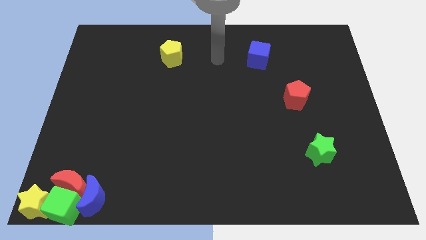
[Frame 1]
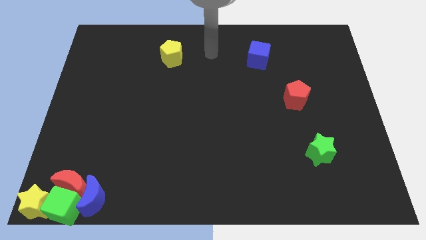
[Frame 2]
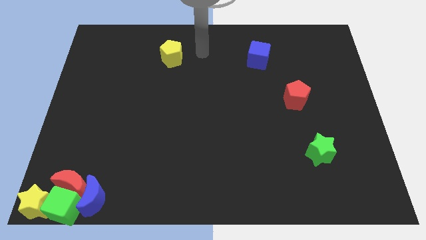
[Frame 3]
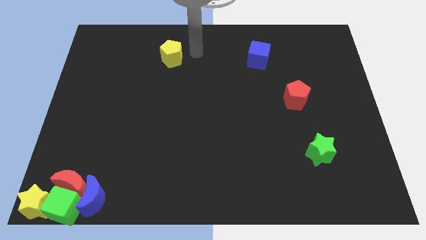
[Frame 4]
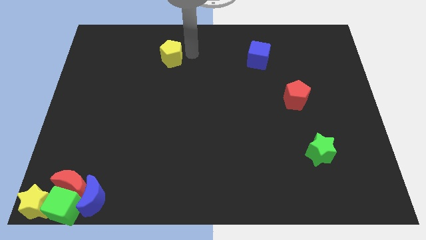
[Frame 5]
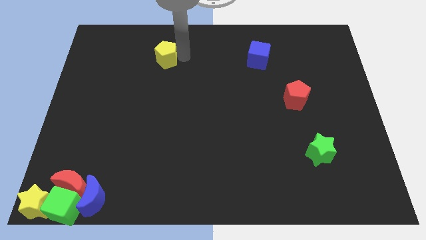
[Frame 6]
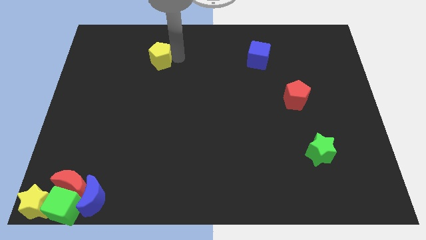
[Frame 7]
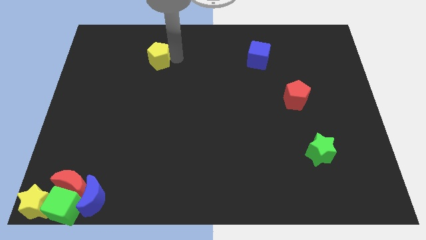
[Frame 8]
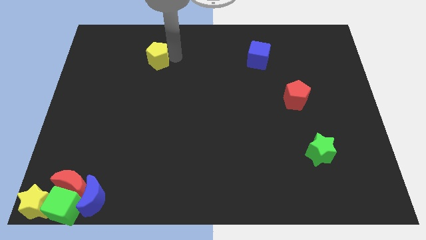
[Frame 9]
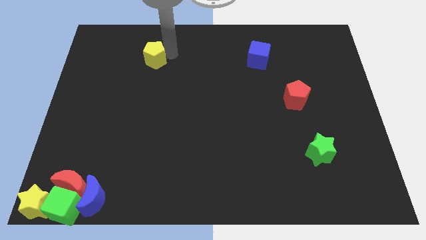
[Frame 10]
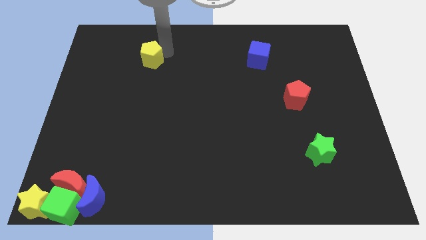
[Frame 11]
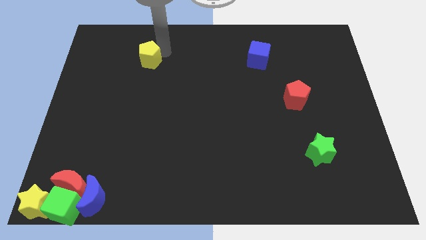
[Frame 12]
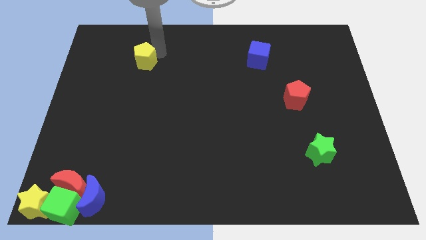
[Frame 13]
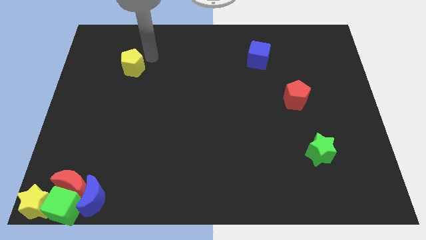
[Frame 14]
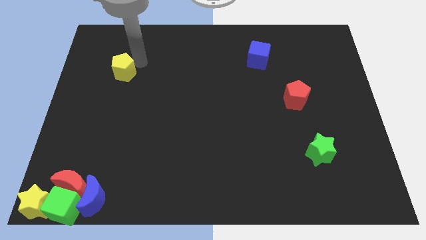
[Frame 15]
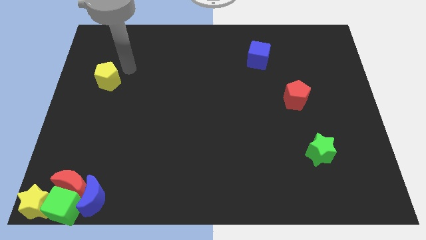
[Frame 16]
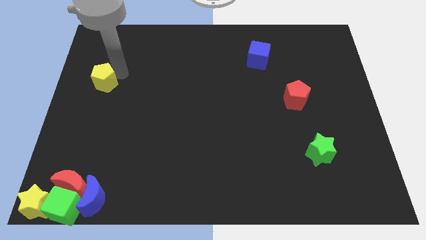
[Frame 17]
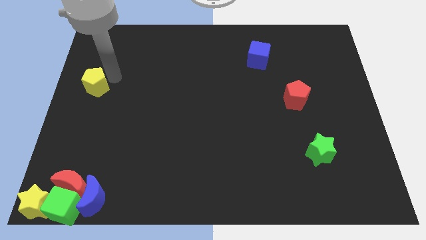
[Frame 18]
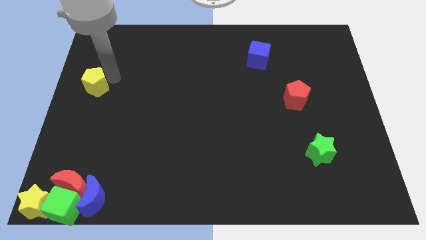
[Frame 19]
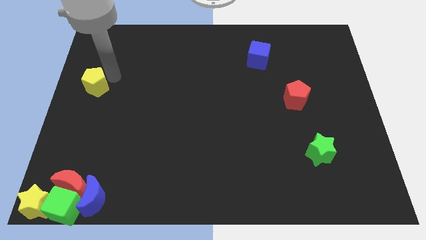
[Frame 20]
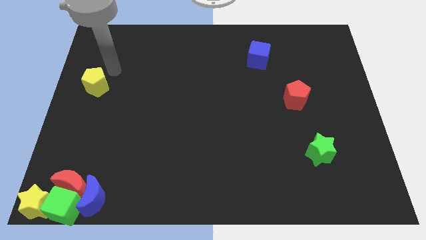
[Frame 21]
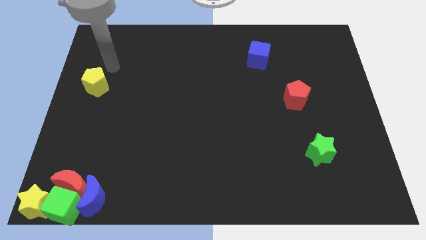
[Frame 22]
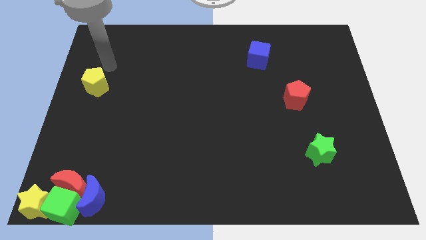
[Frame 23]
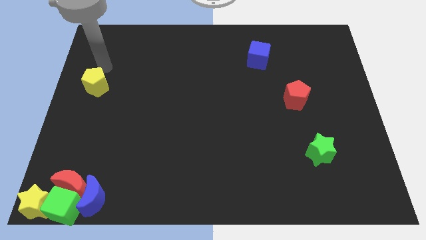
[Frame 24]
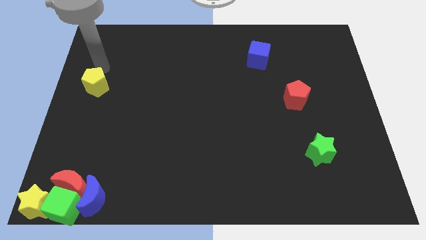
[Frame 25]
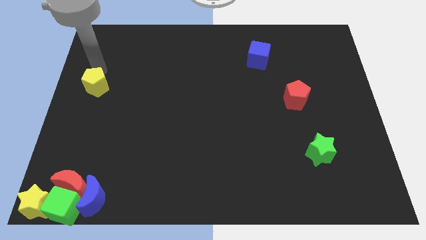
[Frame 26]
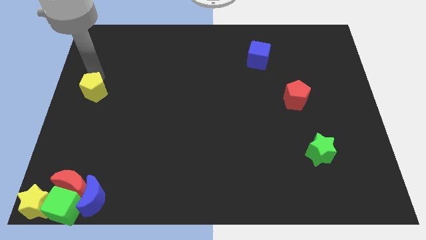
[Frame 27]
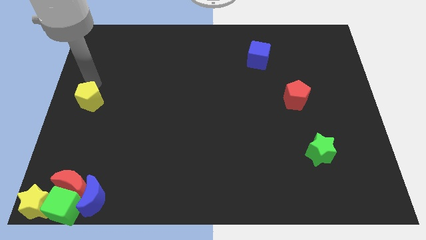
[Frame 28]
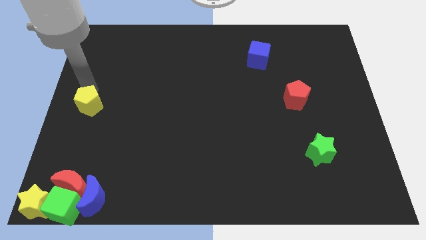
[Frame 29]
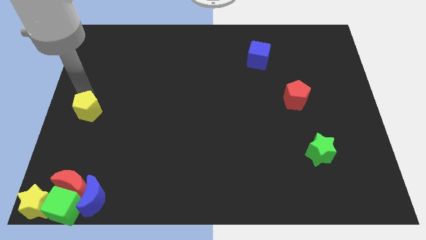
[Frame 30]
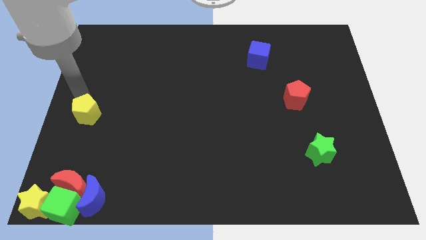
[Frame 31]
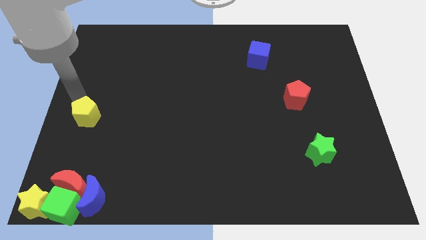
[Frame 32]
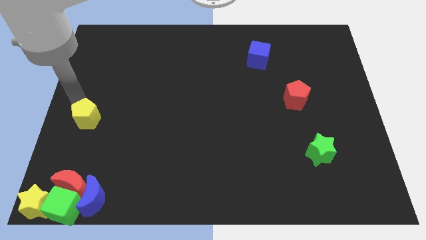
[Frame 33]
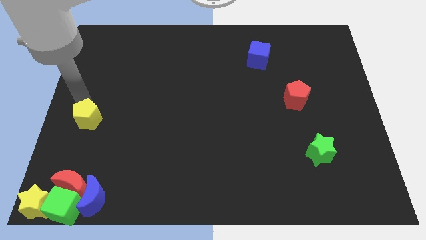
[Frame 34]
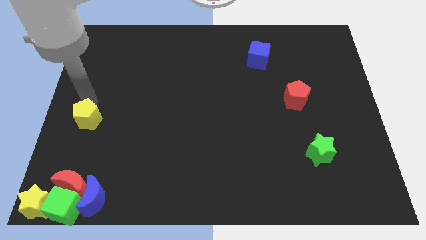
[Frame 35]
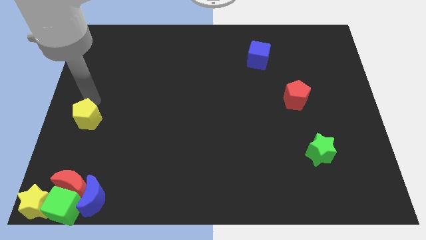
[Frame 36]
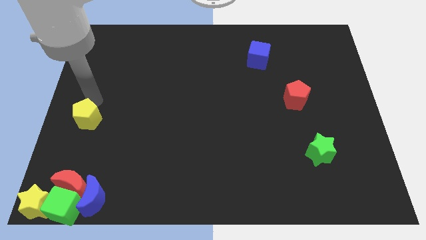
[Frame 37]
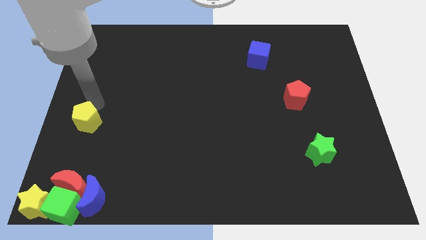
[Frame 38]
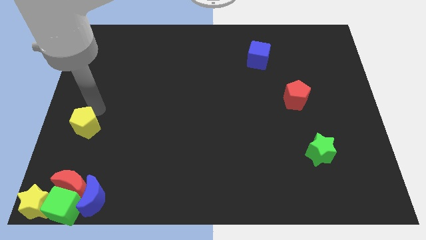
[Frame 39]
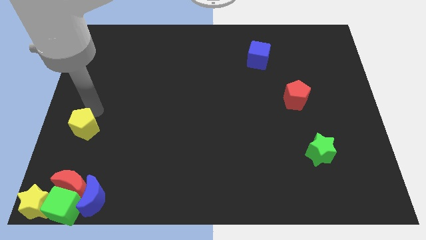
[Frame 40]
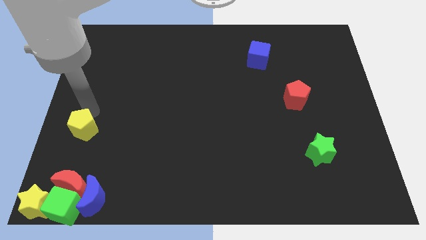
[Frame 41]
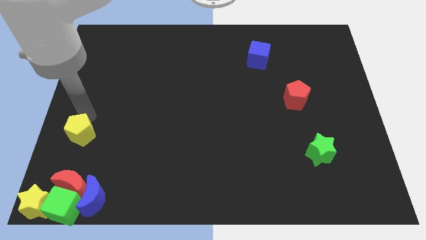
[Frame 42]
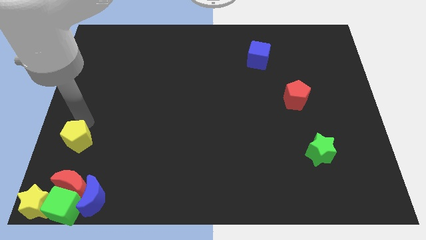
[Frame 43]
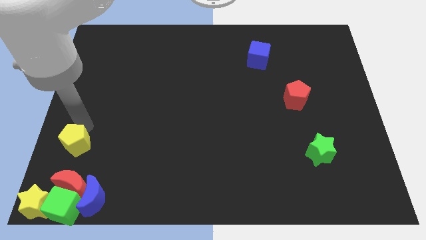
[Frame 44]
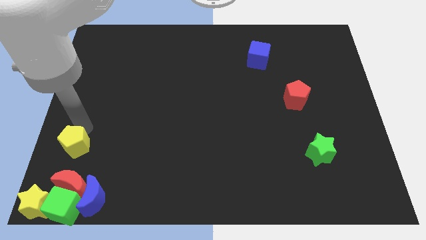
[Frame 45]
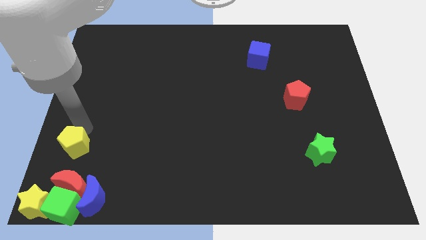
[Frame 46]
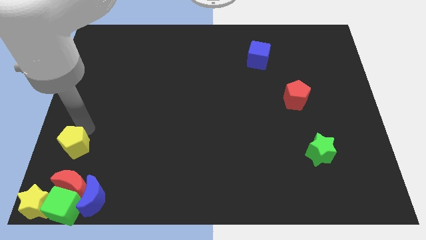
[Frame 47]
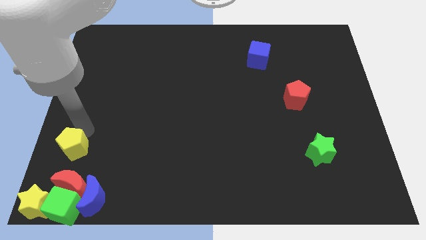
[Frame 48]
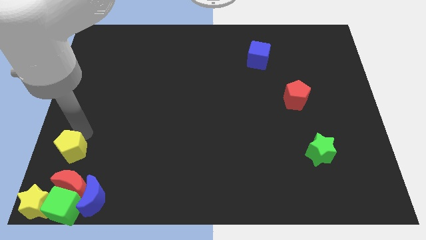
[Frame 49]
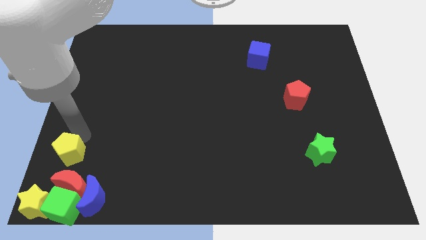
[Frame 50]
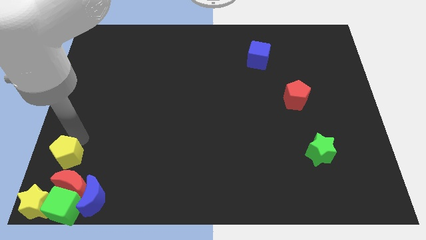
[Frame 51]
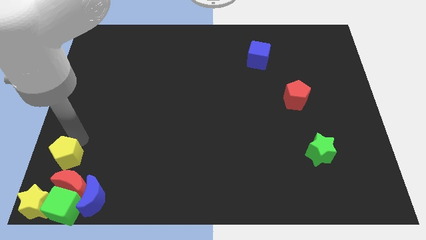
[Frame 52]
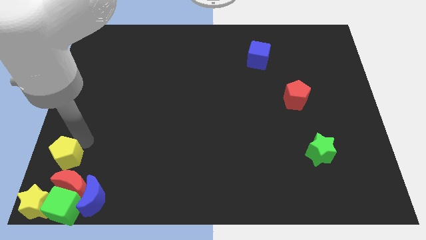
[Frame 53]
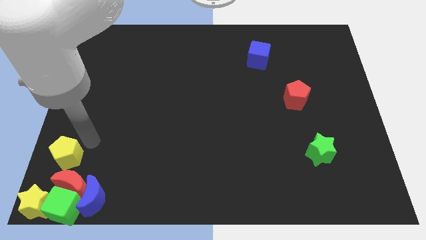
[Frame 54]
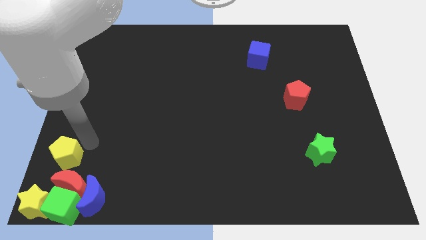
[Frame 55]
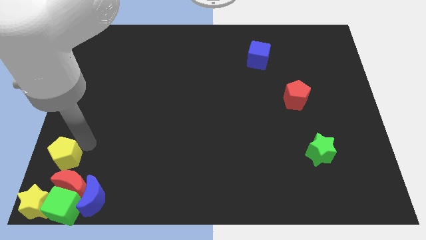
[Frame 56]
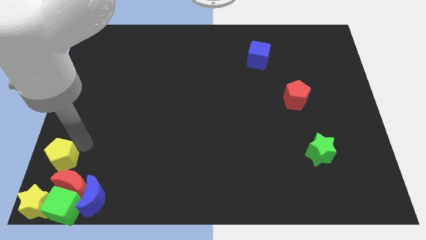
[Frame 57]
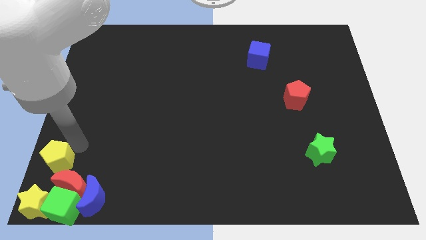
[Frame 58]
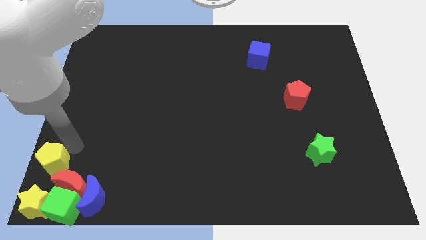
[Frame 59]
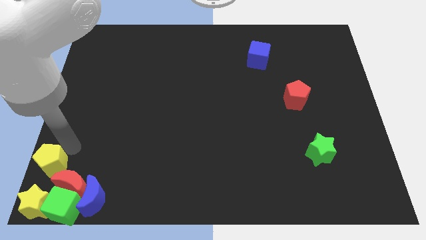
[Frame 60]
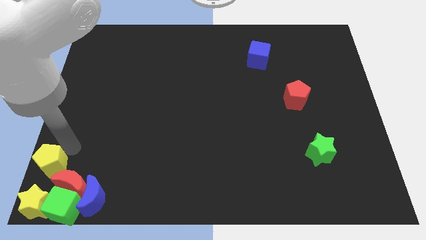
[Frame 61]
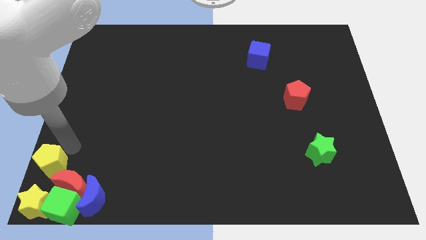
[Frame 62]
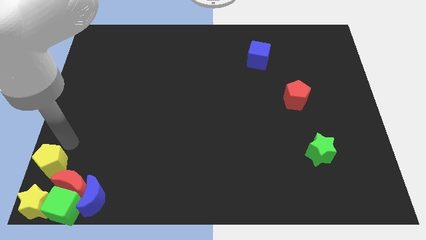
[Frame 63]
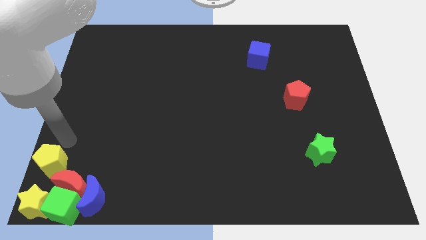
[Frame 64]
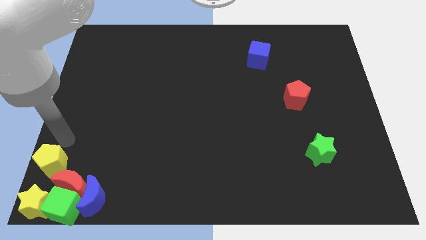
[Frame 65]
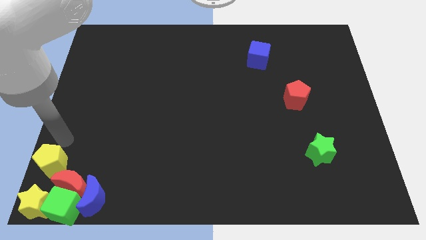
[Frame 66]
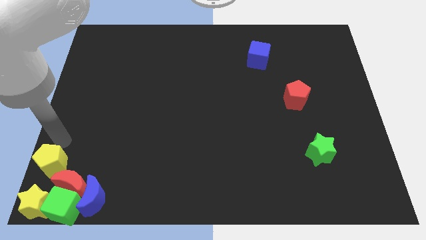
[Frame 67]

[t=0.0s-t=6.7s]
push the yellow pentagon towards the yellow star

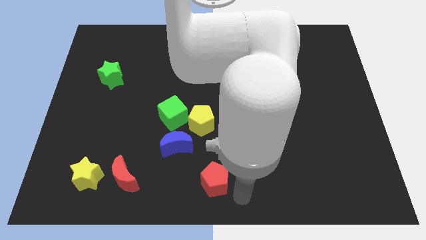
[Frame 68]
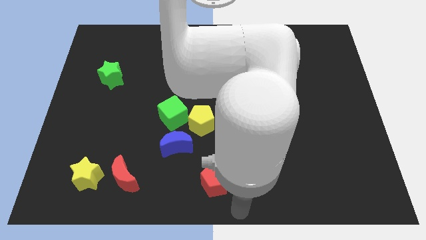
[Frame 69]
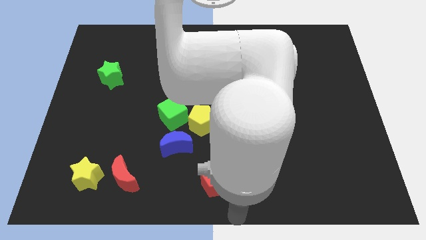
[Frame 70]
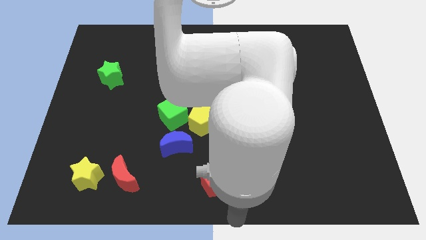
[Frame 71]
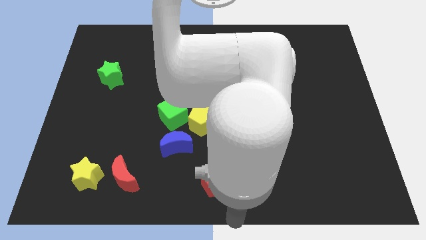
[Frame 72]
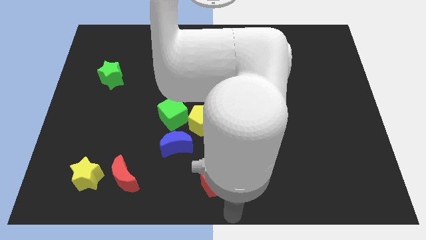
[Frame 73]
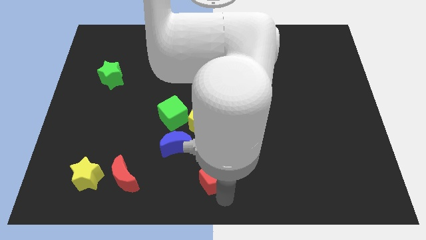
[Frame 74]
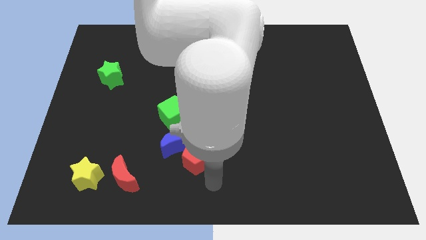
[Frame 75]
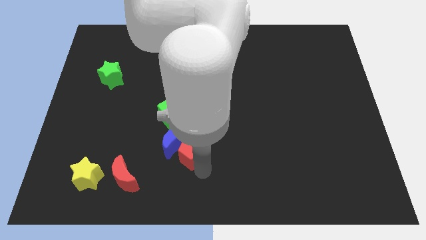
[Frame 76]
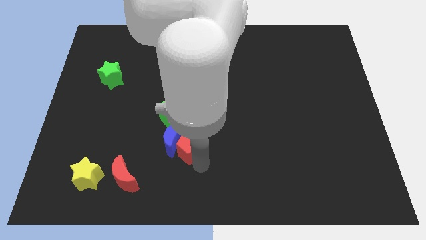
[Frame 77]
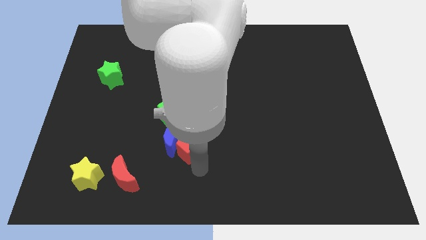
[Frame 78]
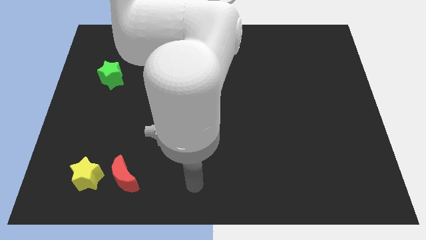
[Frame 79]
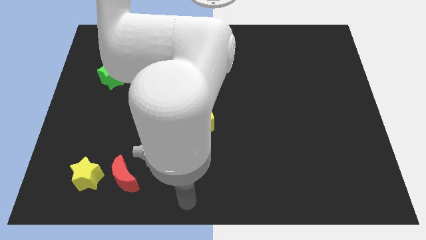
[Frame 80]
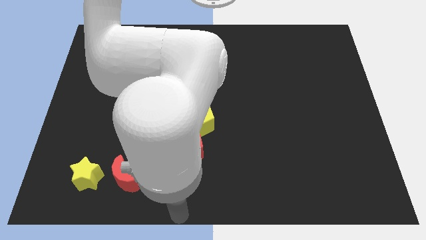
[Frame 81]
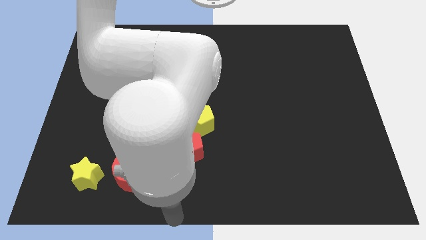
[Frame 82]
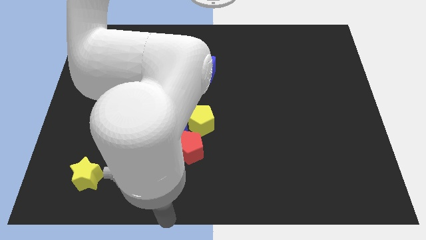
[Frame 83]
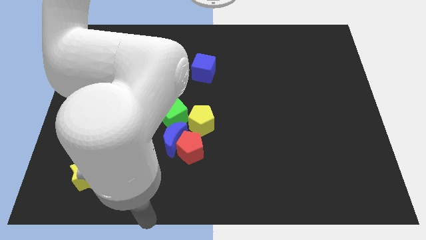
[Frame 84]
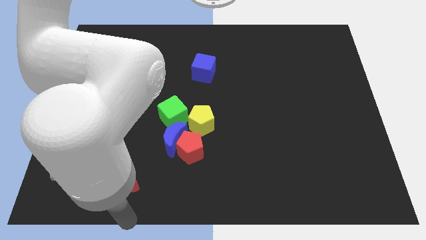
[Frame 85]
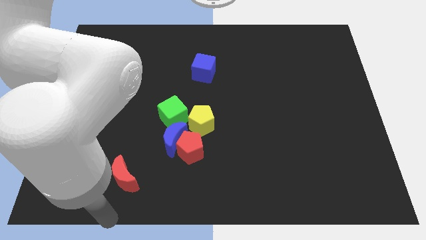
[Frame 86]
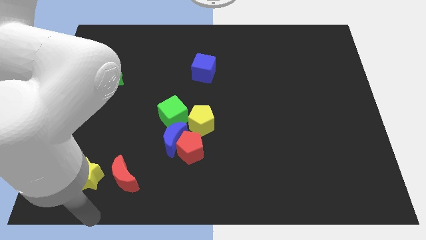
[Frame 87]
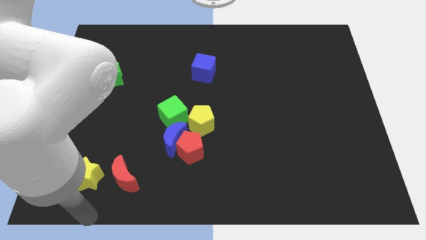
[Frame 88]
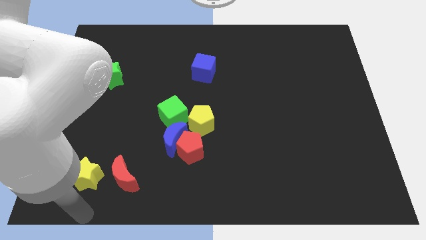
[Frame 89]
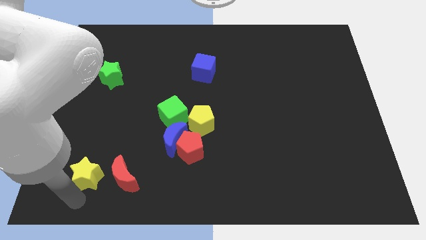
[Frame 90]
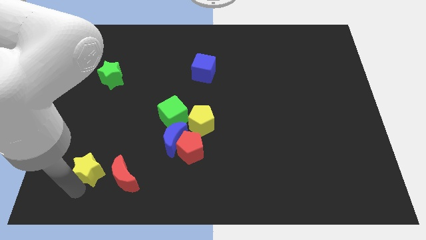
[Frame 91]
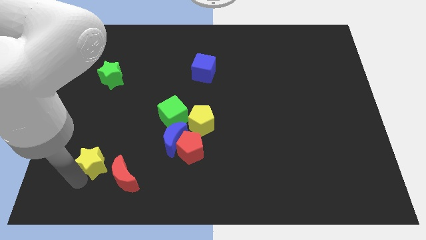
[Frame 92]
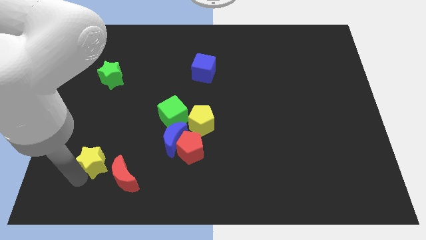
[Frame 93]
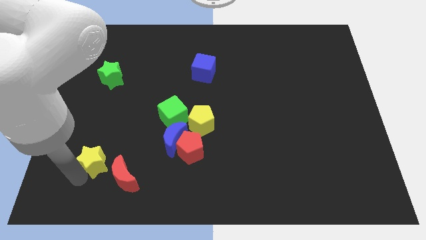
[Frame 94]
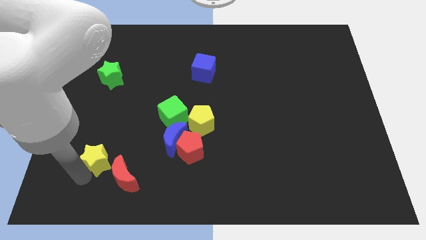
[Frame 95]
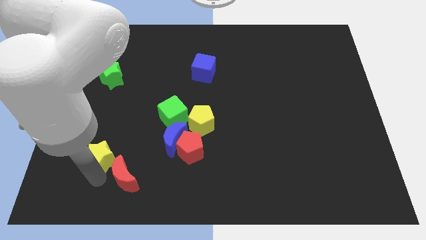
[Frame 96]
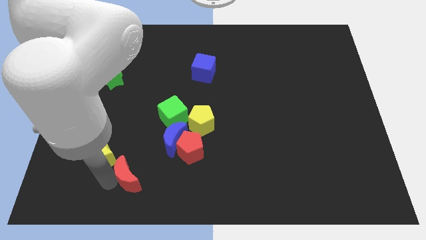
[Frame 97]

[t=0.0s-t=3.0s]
move the yellow star slightly up
